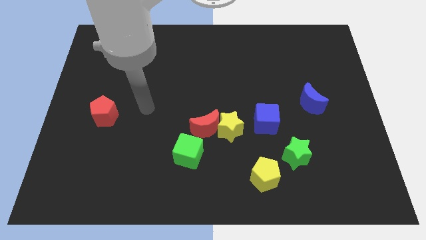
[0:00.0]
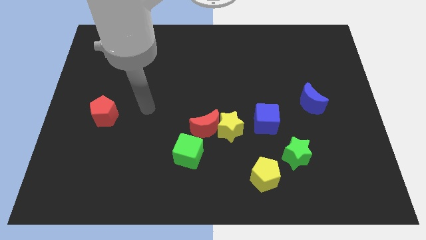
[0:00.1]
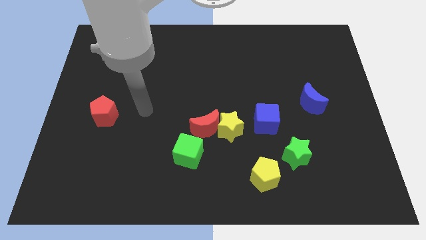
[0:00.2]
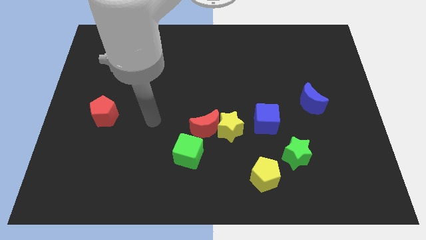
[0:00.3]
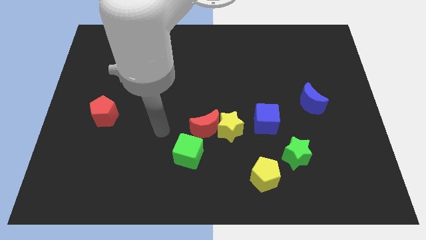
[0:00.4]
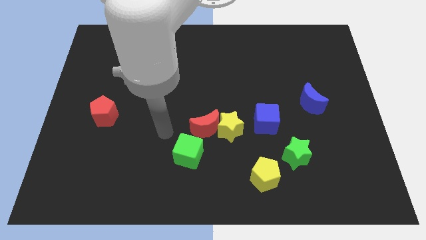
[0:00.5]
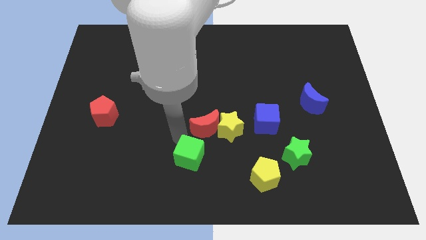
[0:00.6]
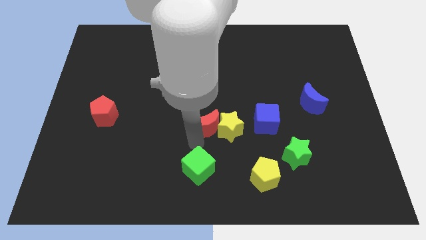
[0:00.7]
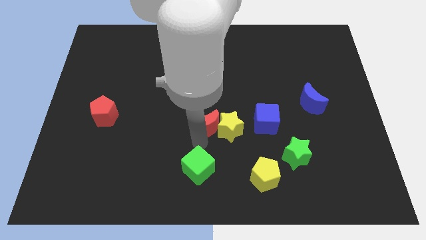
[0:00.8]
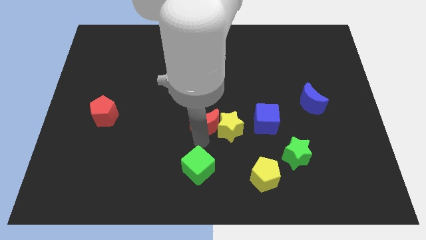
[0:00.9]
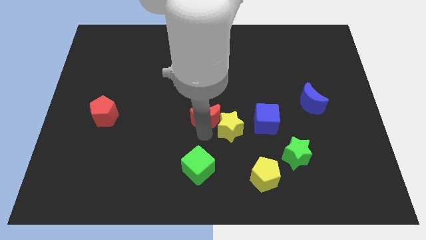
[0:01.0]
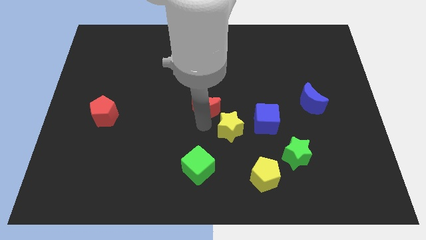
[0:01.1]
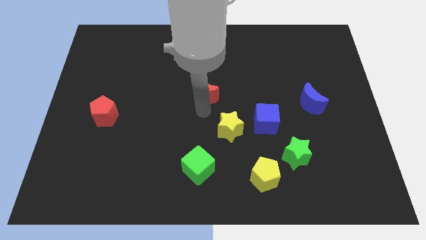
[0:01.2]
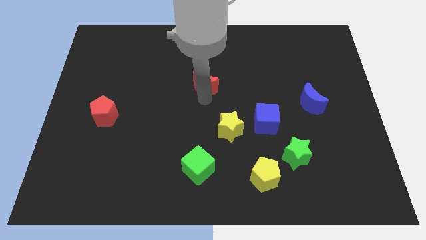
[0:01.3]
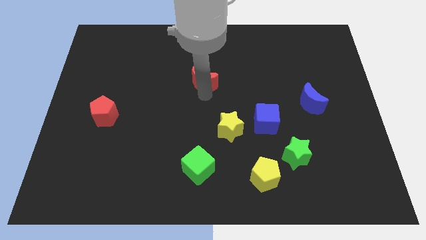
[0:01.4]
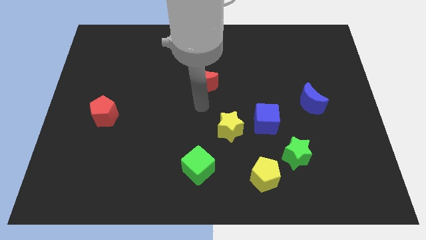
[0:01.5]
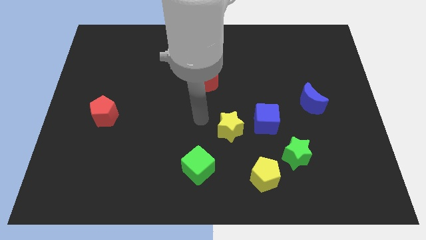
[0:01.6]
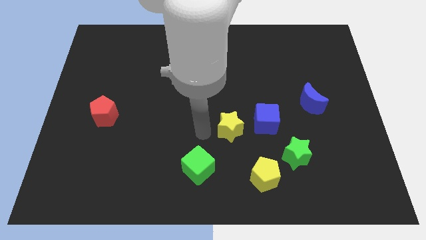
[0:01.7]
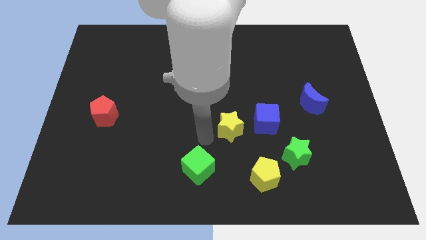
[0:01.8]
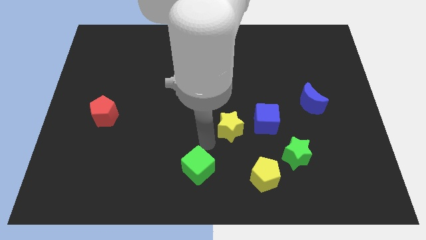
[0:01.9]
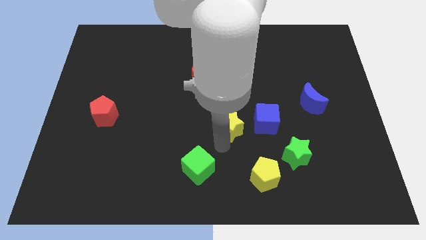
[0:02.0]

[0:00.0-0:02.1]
separate the red crescent and green cube

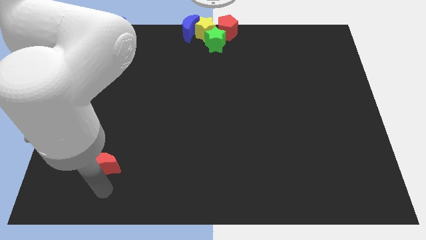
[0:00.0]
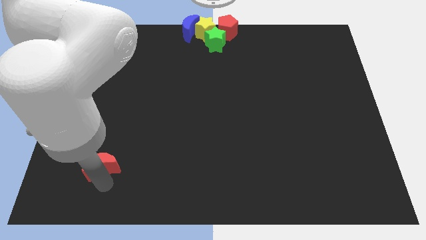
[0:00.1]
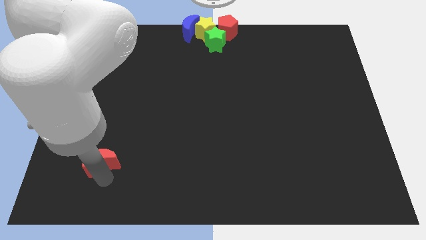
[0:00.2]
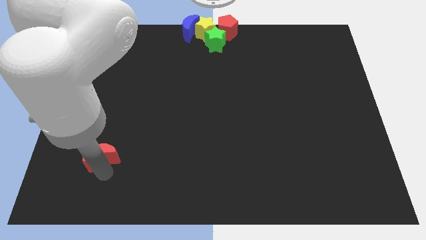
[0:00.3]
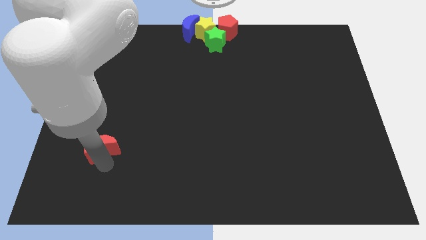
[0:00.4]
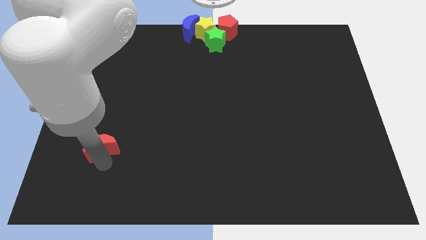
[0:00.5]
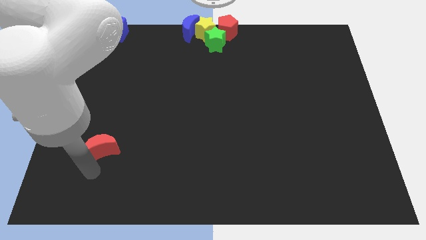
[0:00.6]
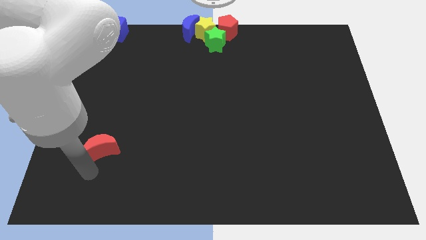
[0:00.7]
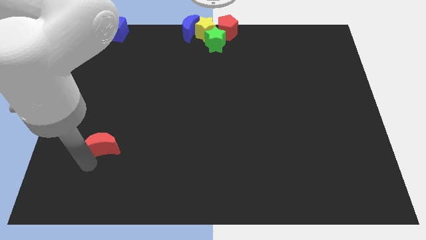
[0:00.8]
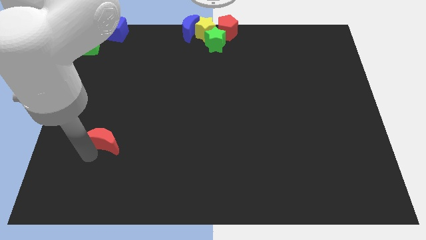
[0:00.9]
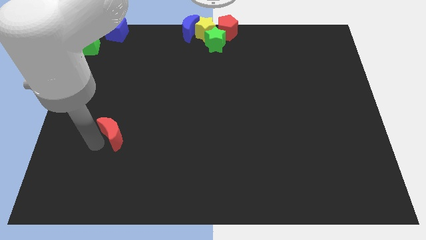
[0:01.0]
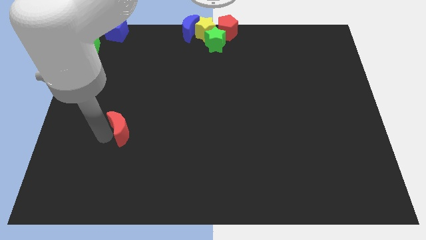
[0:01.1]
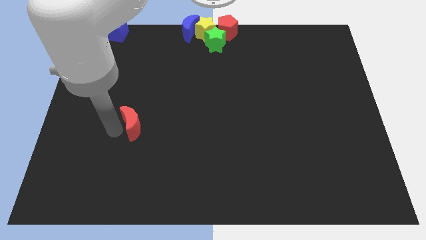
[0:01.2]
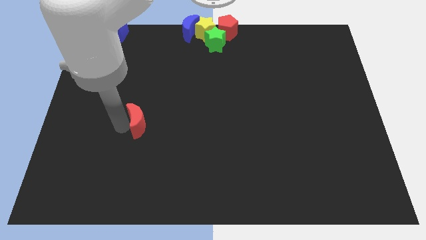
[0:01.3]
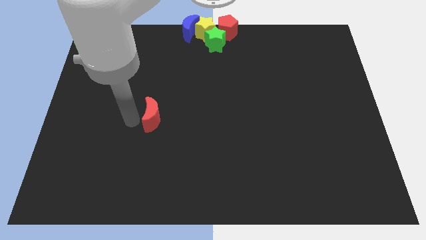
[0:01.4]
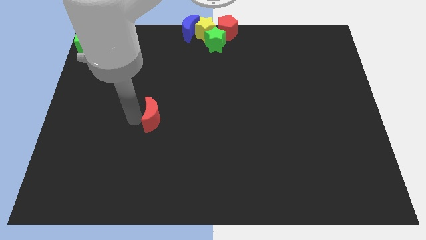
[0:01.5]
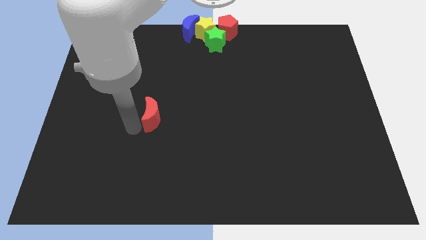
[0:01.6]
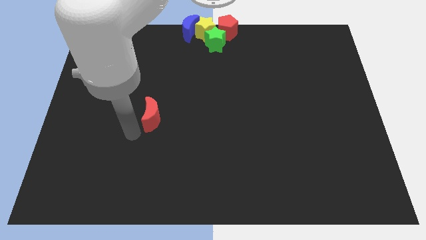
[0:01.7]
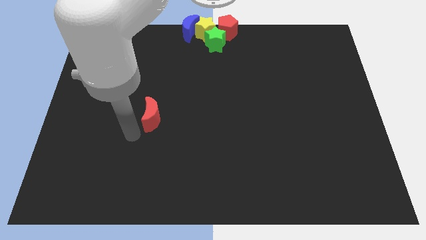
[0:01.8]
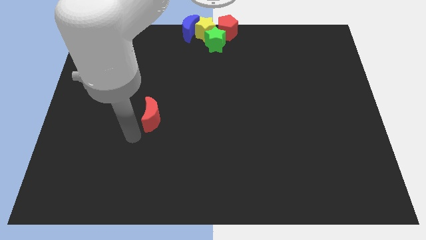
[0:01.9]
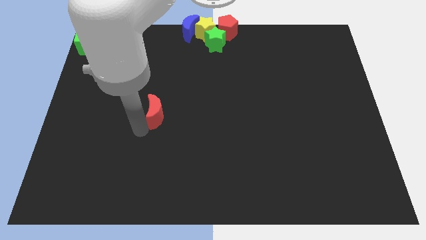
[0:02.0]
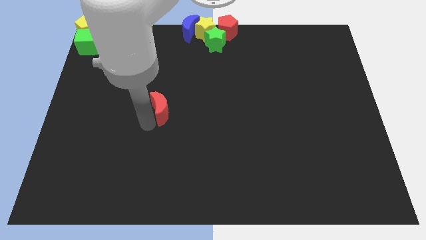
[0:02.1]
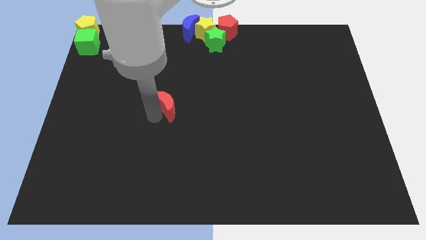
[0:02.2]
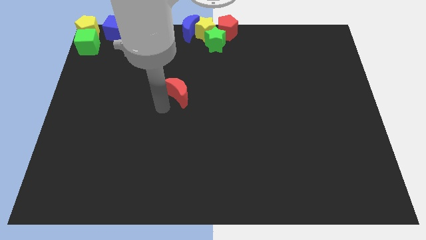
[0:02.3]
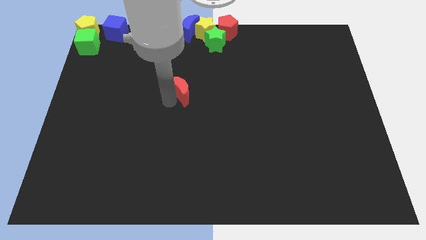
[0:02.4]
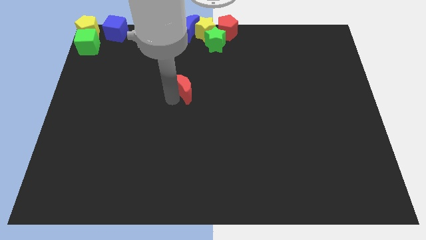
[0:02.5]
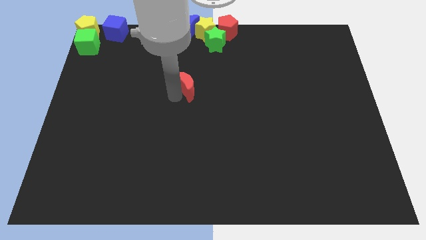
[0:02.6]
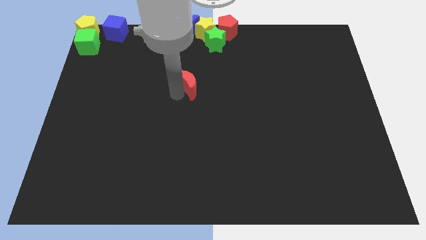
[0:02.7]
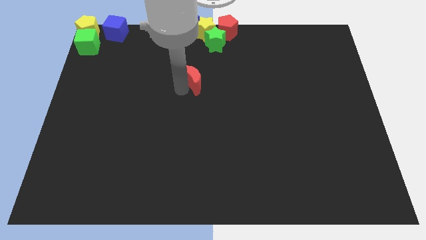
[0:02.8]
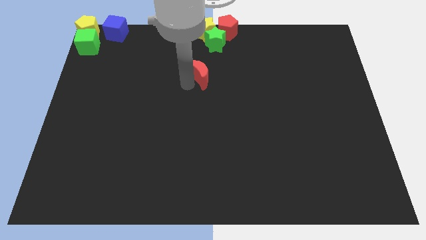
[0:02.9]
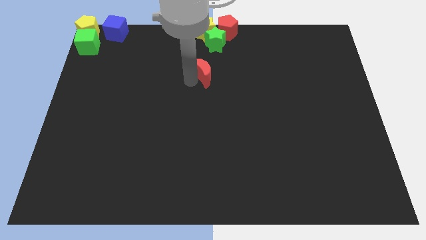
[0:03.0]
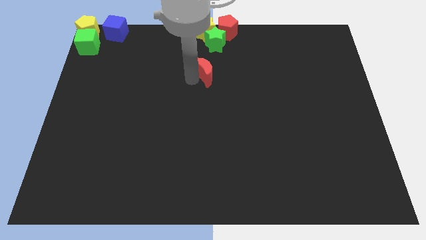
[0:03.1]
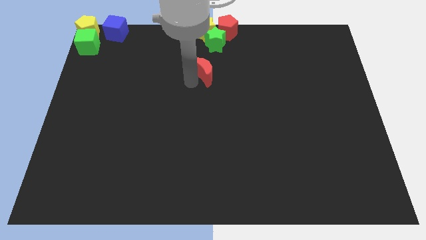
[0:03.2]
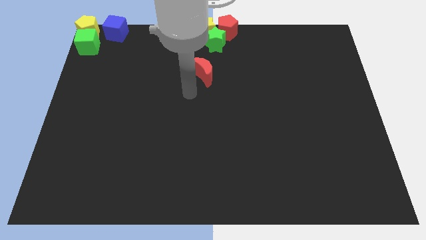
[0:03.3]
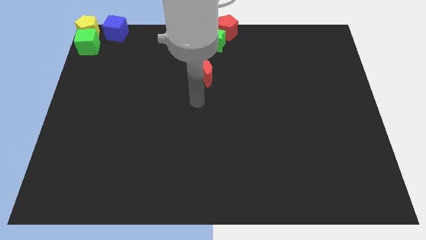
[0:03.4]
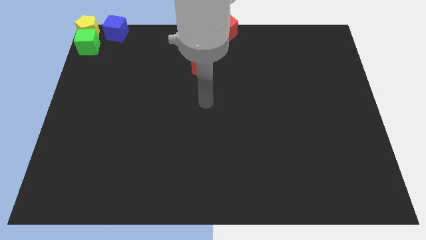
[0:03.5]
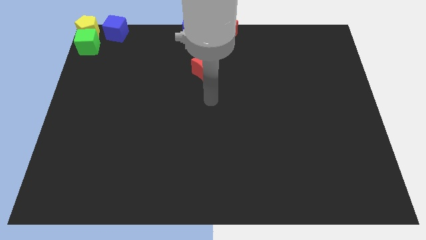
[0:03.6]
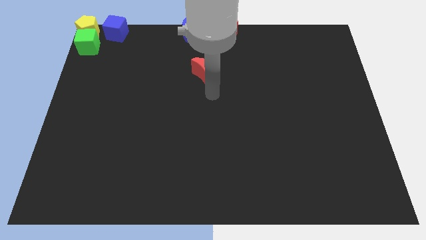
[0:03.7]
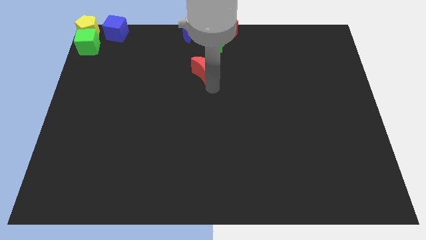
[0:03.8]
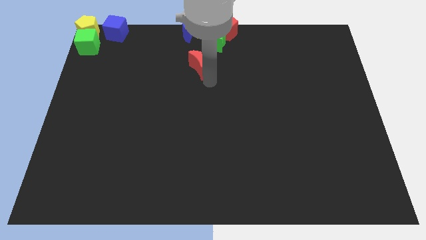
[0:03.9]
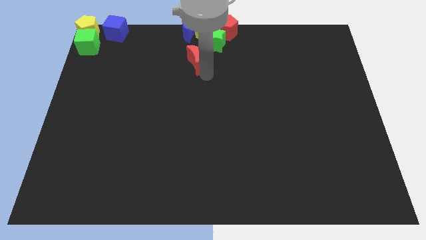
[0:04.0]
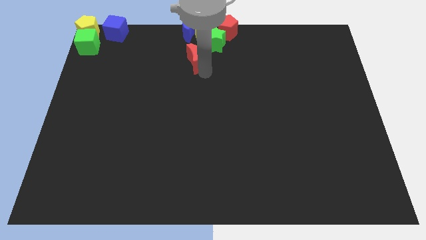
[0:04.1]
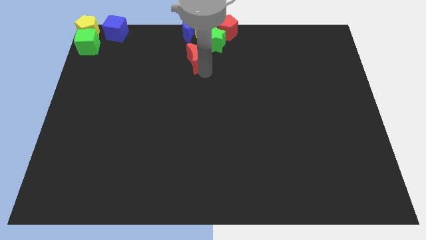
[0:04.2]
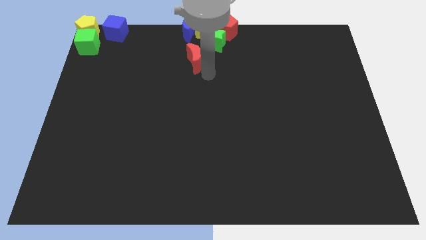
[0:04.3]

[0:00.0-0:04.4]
put the red moon vertically below the blue moon

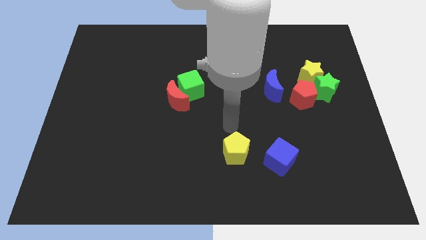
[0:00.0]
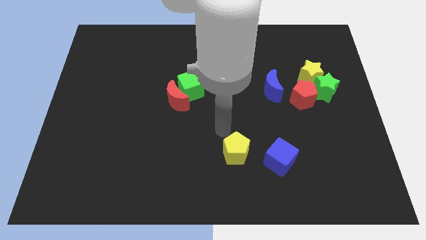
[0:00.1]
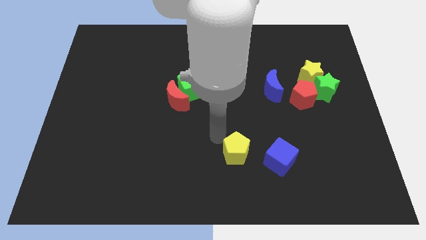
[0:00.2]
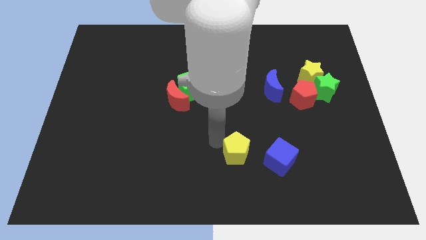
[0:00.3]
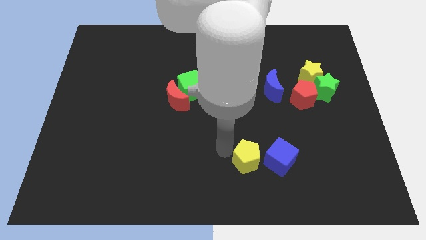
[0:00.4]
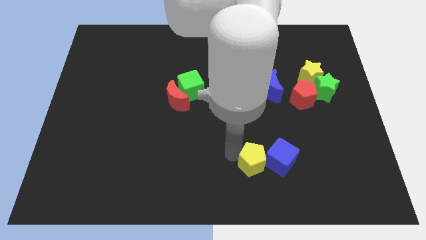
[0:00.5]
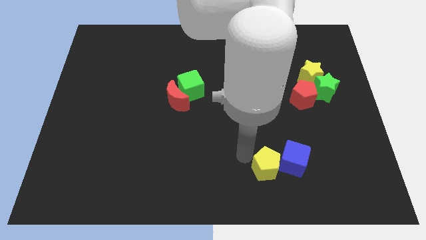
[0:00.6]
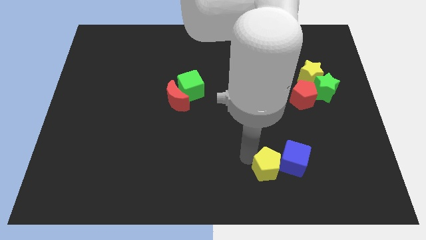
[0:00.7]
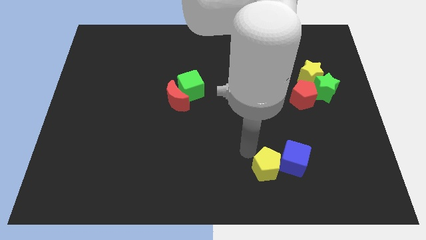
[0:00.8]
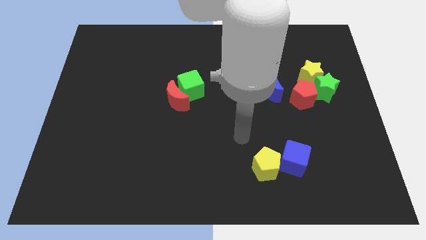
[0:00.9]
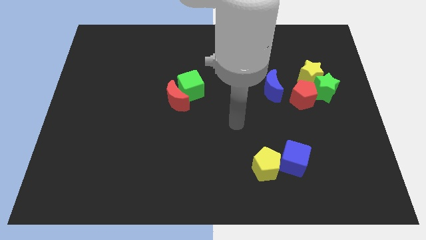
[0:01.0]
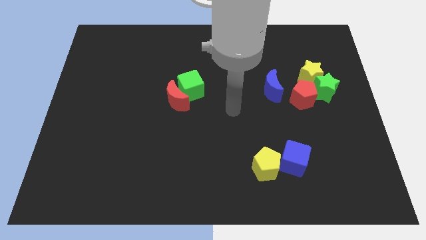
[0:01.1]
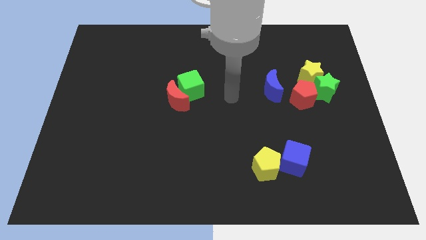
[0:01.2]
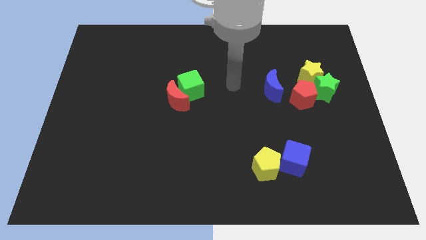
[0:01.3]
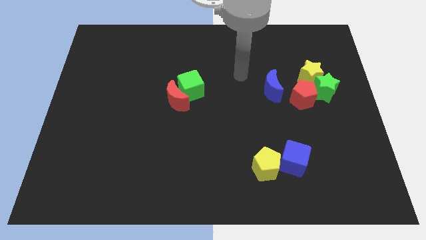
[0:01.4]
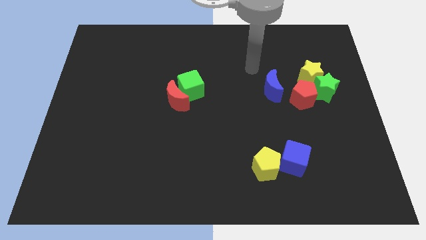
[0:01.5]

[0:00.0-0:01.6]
push the yellow pentagon to the left of the blue cube

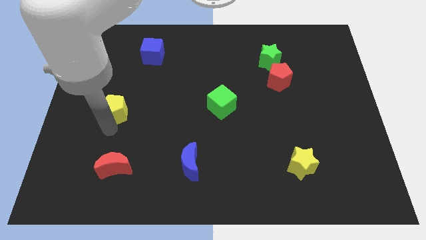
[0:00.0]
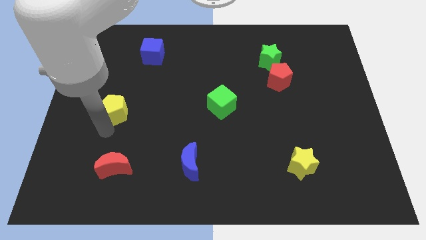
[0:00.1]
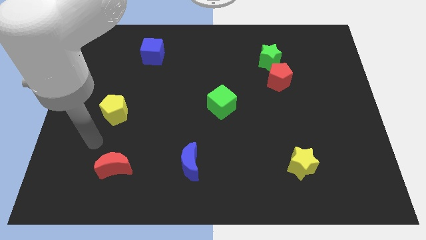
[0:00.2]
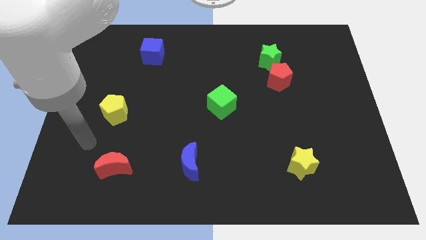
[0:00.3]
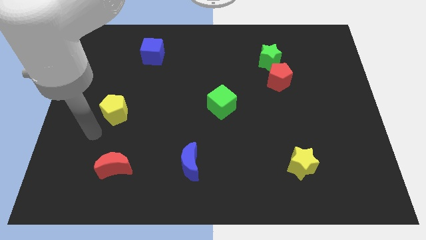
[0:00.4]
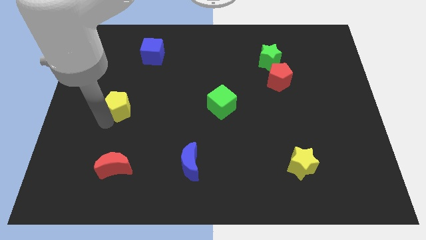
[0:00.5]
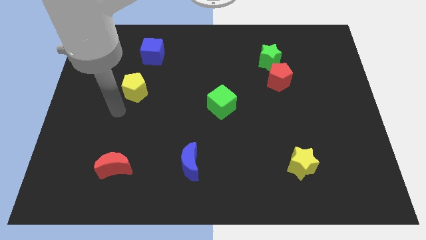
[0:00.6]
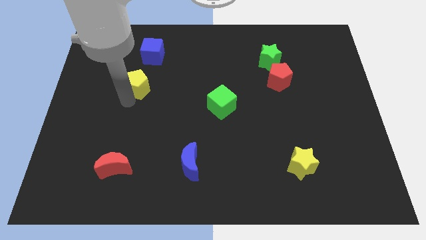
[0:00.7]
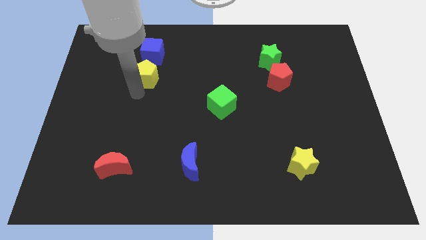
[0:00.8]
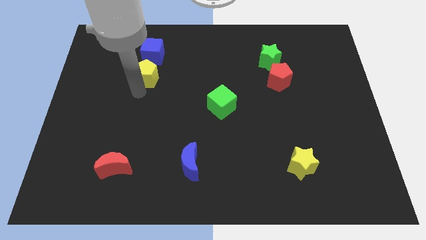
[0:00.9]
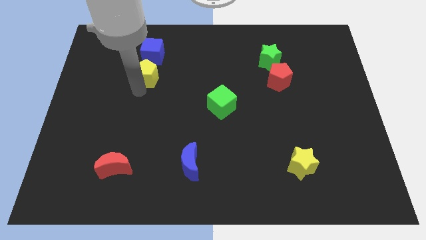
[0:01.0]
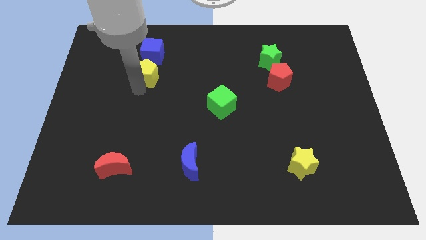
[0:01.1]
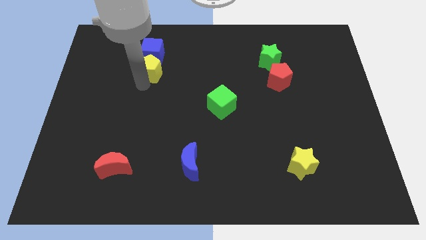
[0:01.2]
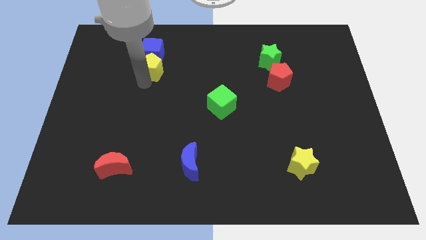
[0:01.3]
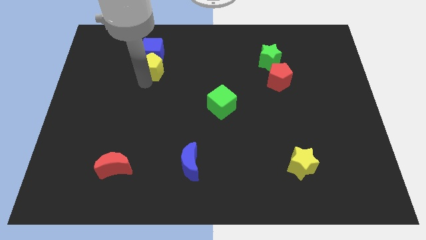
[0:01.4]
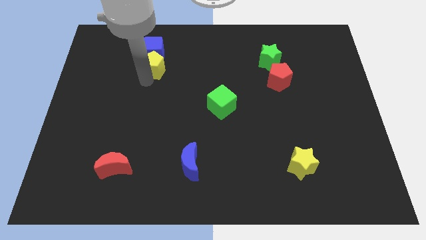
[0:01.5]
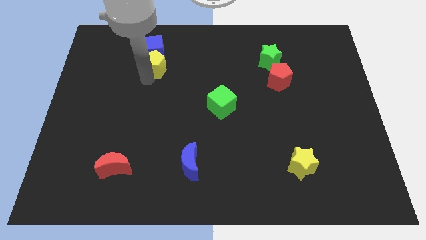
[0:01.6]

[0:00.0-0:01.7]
push the yellow pentagon into the bottom side of the blue cube
